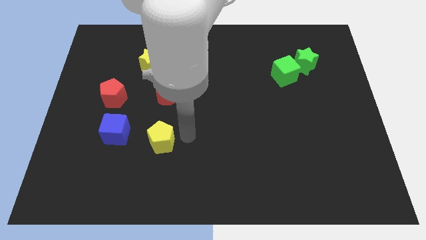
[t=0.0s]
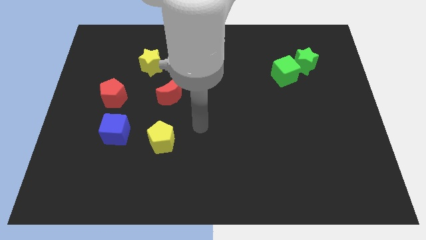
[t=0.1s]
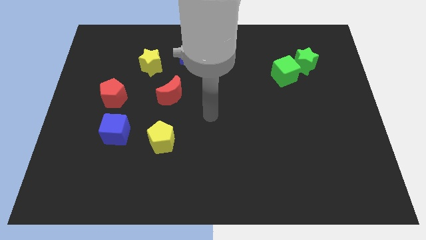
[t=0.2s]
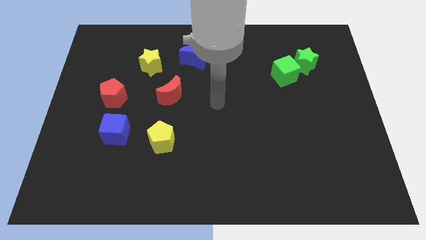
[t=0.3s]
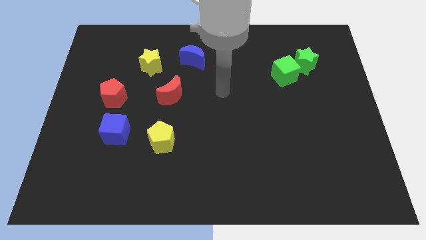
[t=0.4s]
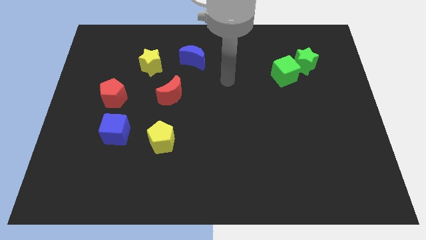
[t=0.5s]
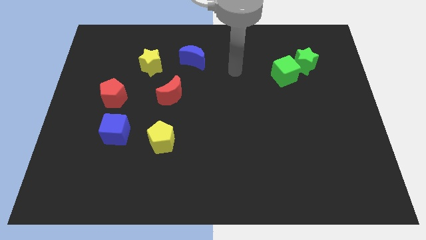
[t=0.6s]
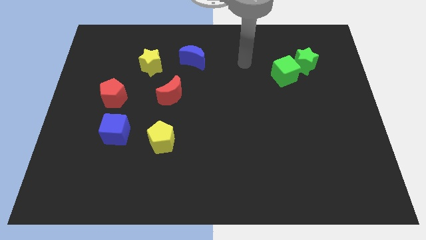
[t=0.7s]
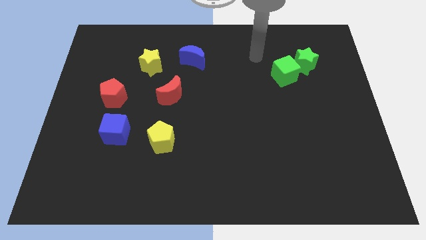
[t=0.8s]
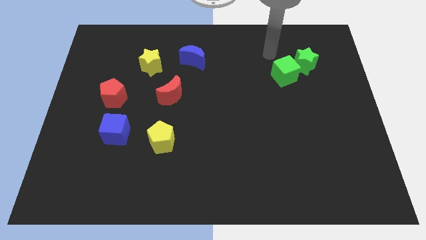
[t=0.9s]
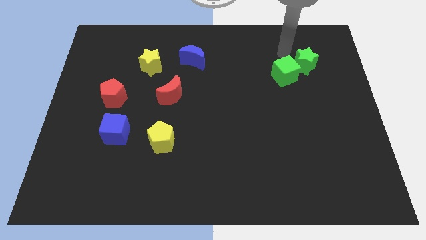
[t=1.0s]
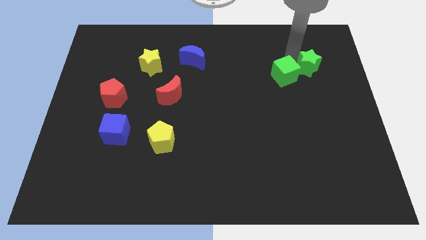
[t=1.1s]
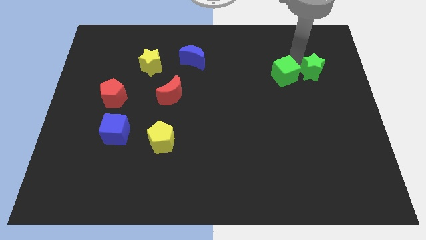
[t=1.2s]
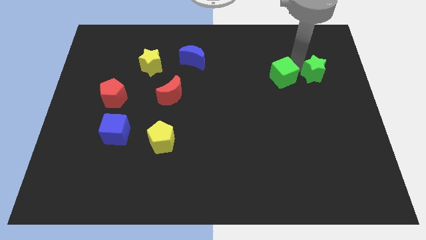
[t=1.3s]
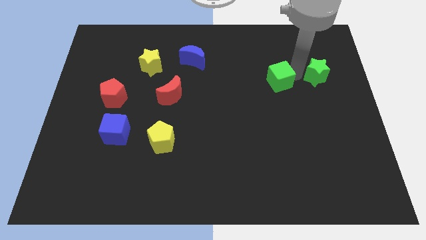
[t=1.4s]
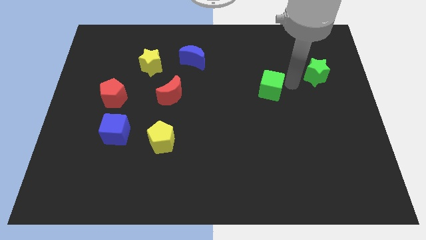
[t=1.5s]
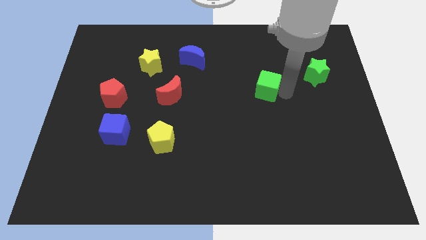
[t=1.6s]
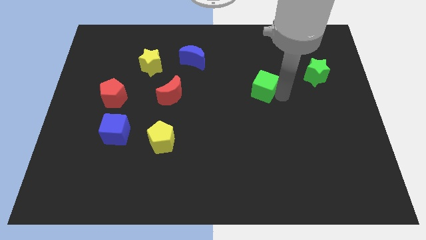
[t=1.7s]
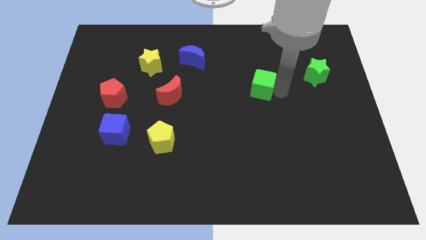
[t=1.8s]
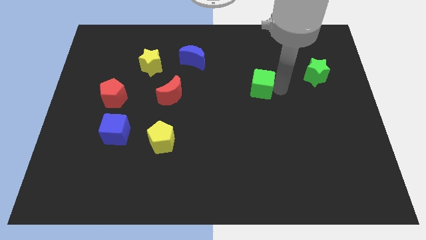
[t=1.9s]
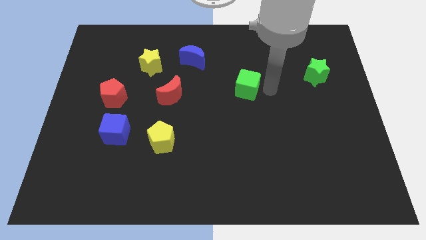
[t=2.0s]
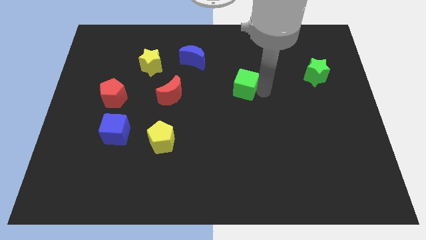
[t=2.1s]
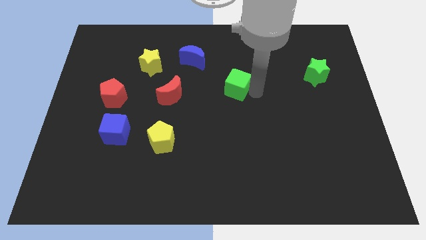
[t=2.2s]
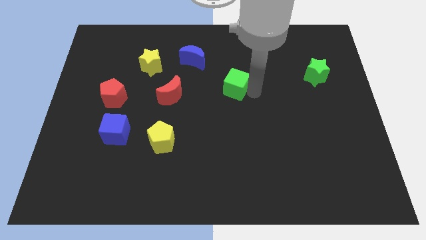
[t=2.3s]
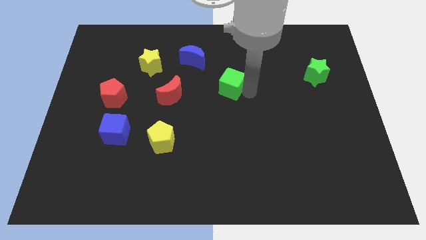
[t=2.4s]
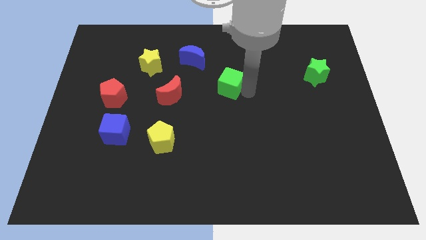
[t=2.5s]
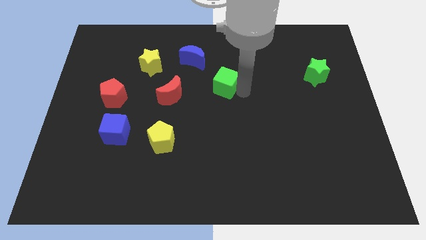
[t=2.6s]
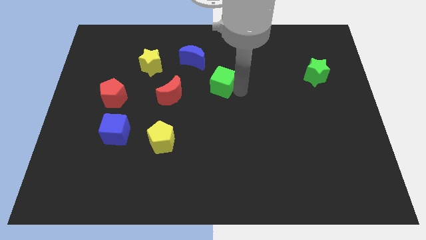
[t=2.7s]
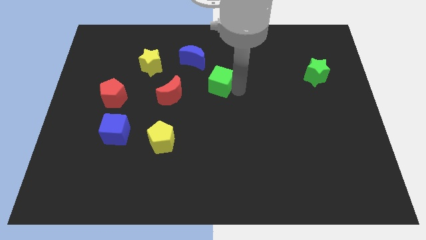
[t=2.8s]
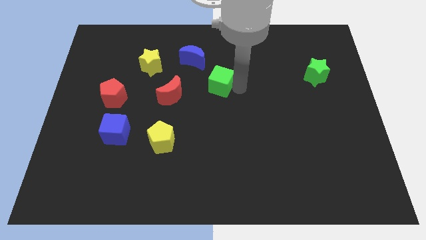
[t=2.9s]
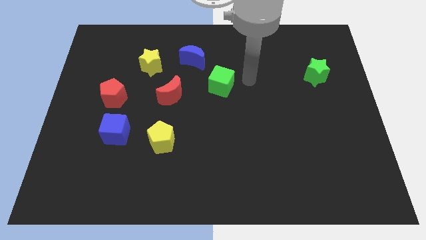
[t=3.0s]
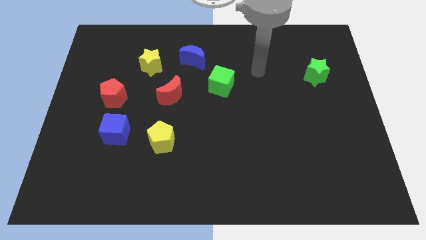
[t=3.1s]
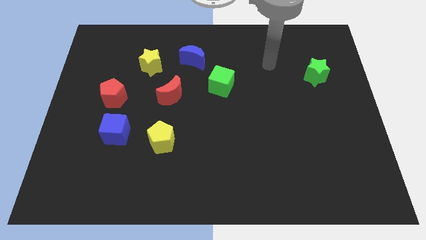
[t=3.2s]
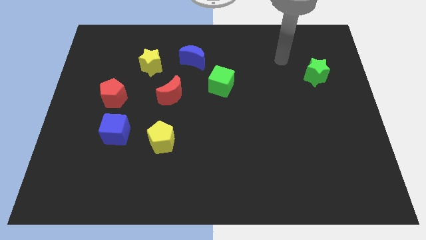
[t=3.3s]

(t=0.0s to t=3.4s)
separate the green cube from the green star

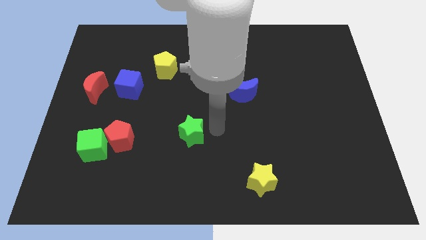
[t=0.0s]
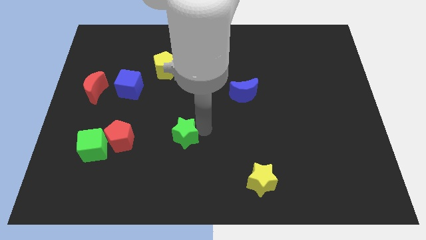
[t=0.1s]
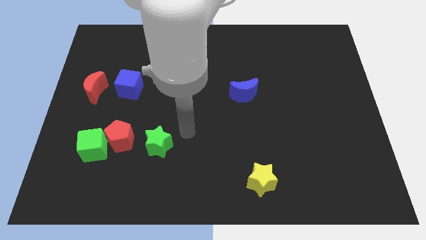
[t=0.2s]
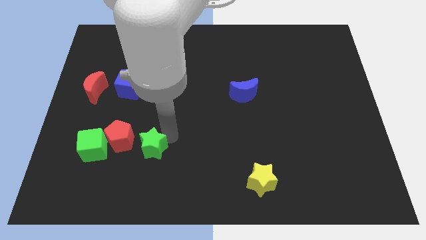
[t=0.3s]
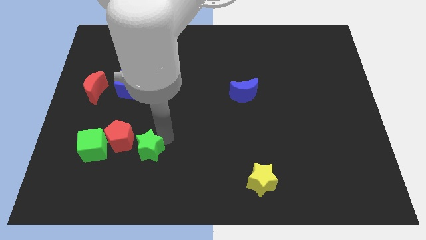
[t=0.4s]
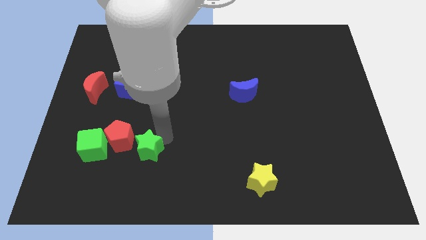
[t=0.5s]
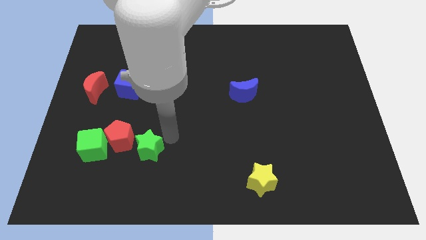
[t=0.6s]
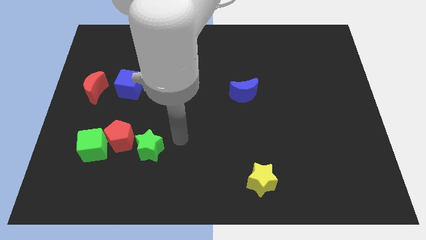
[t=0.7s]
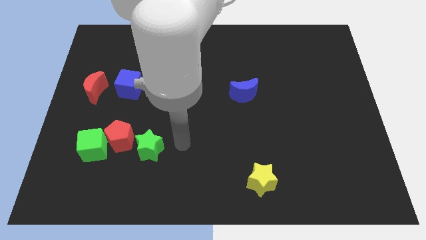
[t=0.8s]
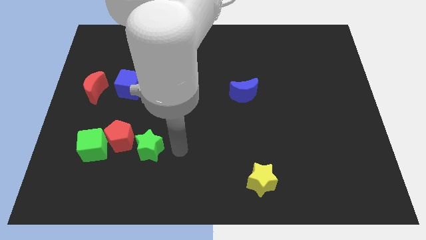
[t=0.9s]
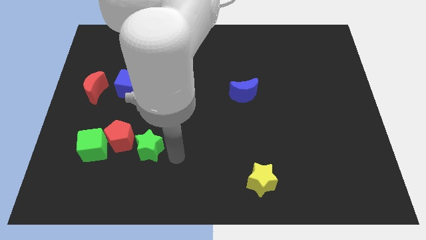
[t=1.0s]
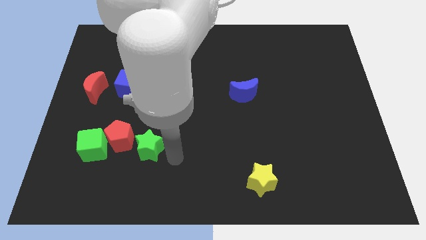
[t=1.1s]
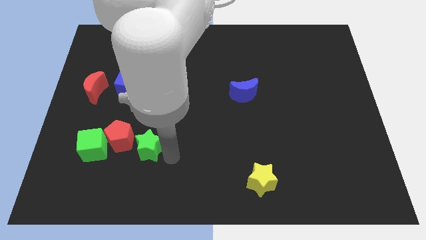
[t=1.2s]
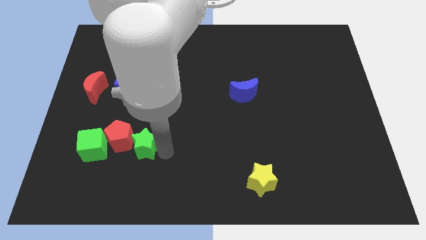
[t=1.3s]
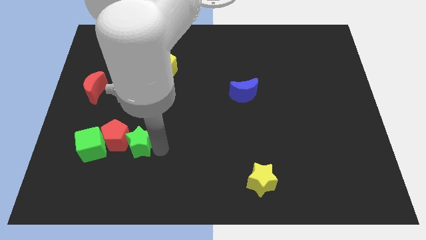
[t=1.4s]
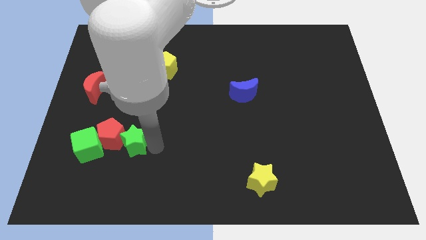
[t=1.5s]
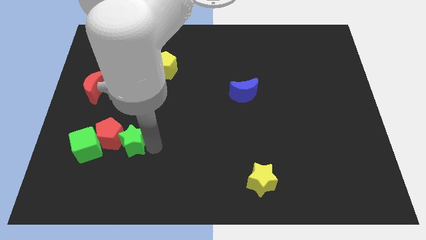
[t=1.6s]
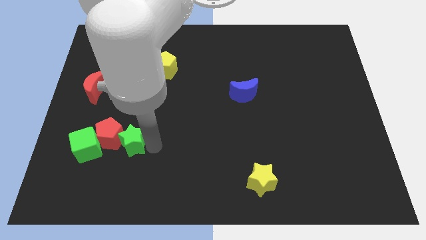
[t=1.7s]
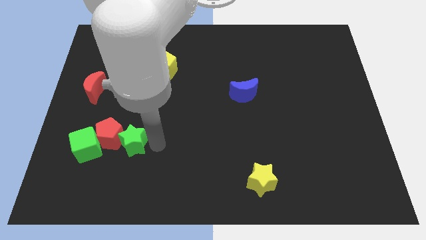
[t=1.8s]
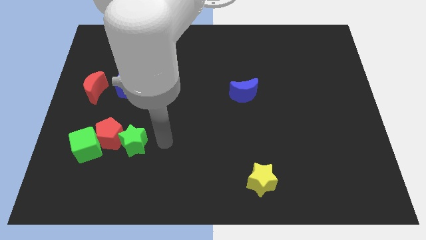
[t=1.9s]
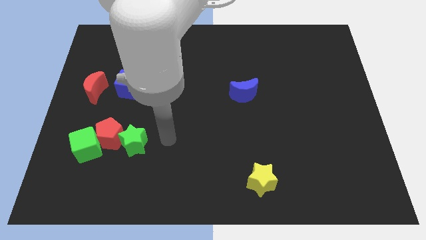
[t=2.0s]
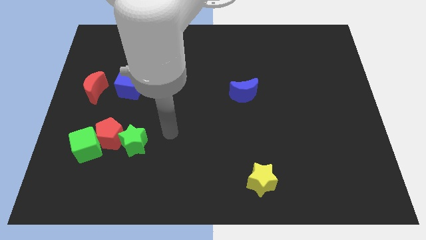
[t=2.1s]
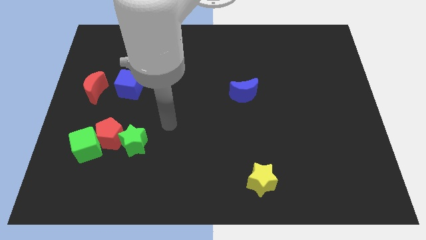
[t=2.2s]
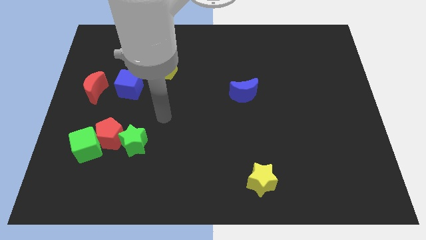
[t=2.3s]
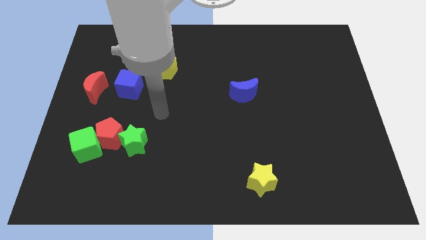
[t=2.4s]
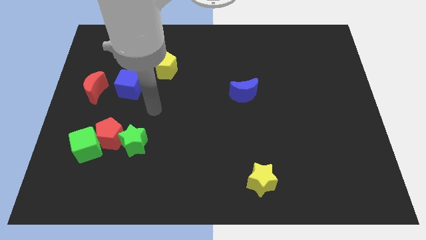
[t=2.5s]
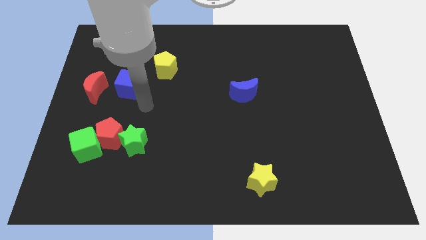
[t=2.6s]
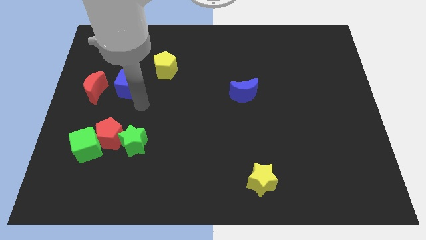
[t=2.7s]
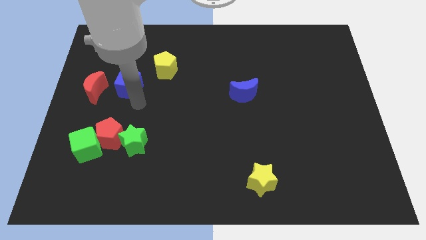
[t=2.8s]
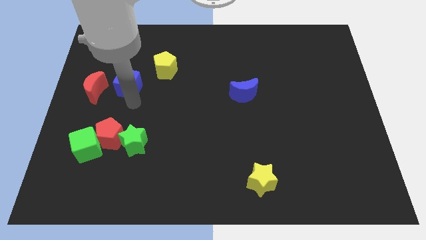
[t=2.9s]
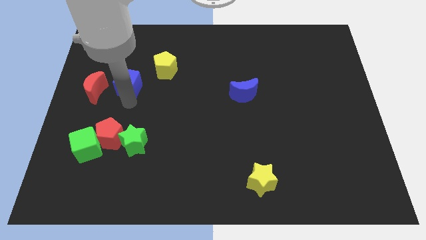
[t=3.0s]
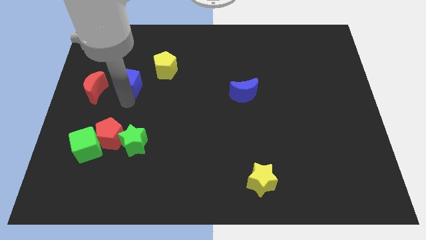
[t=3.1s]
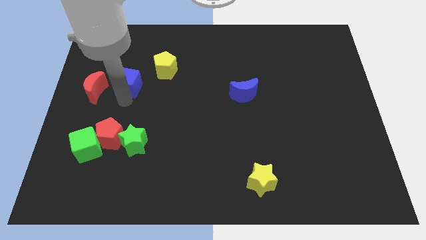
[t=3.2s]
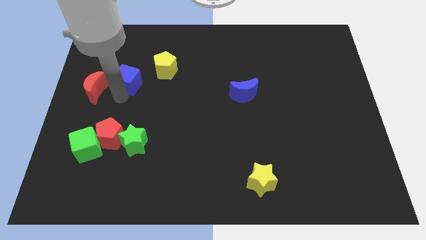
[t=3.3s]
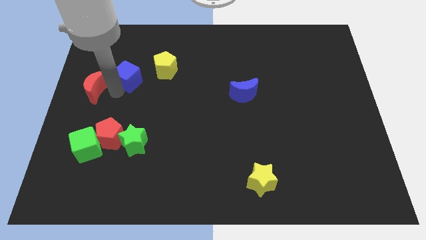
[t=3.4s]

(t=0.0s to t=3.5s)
push the green star into the red pentagon

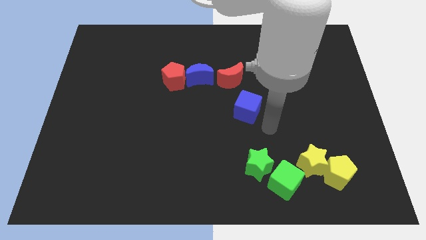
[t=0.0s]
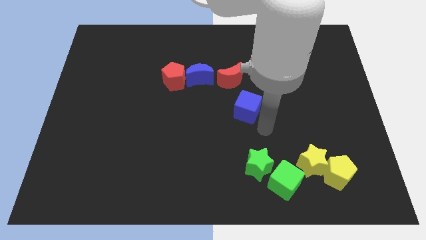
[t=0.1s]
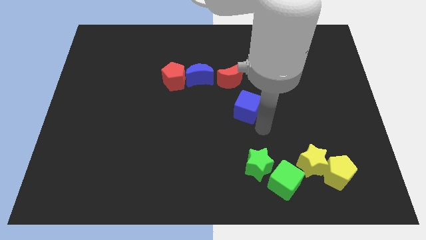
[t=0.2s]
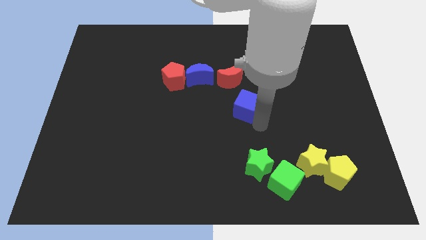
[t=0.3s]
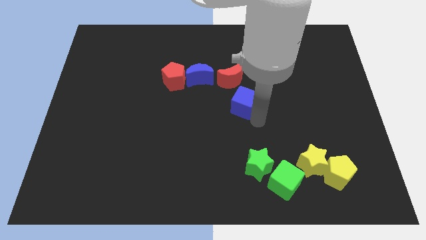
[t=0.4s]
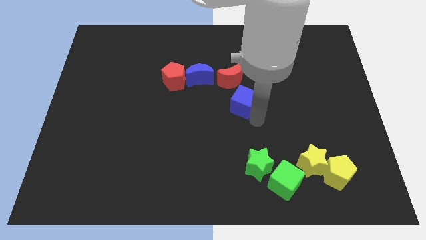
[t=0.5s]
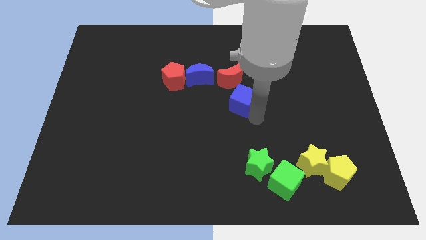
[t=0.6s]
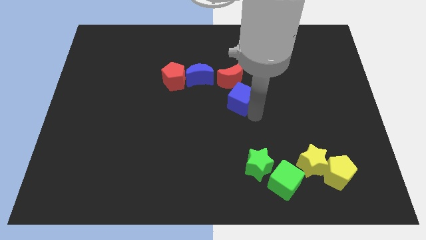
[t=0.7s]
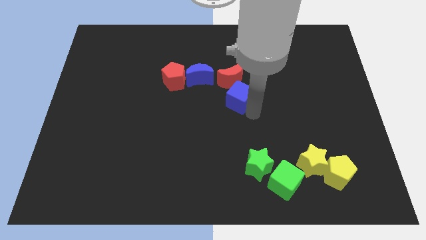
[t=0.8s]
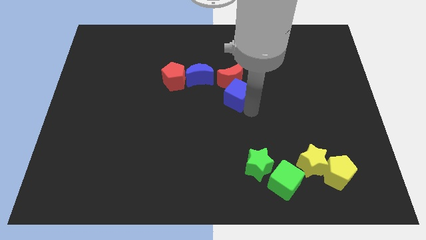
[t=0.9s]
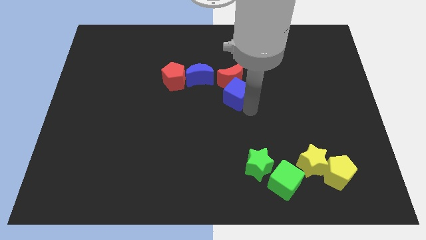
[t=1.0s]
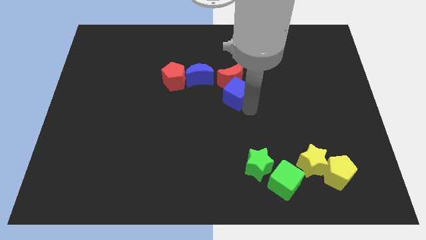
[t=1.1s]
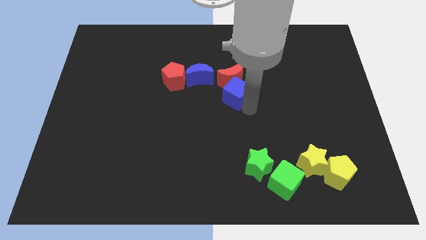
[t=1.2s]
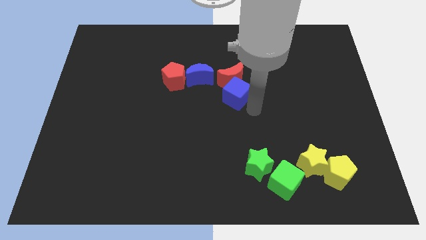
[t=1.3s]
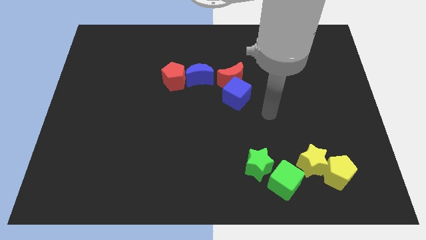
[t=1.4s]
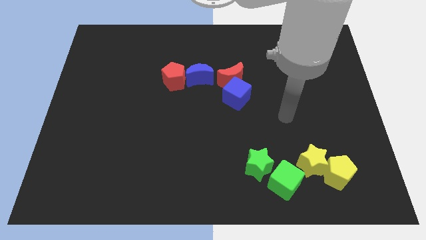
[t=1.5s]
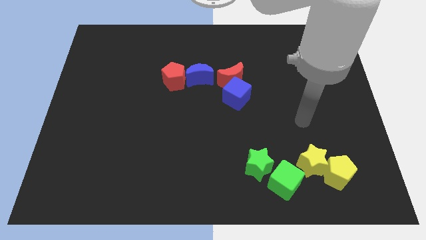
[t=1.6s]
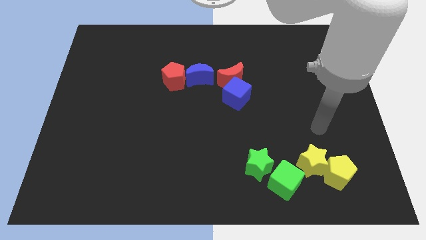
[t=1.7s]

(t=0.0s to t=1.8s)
move the blue cube to the bottom of the red crescent

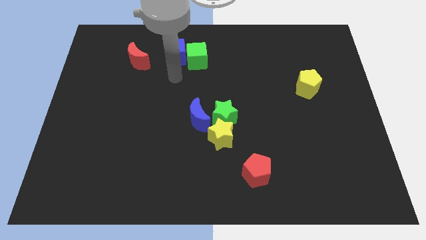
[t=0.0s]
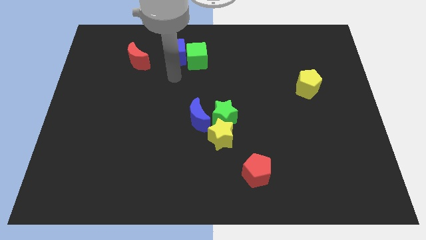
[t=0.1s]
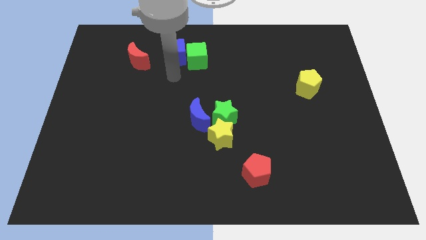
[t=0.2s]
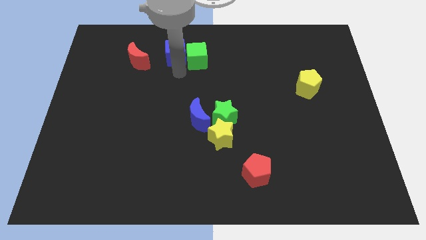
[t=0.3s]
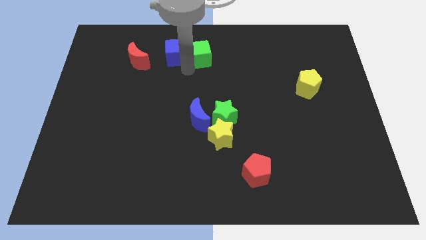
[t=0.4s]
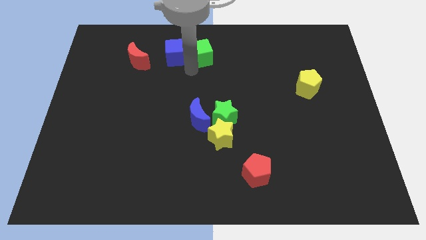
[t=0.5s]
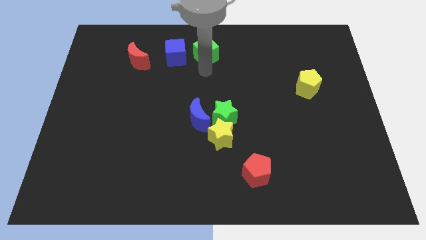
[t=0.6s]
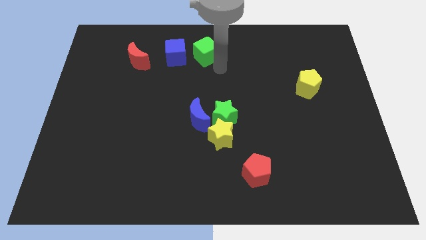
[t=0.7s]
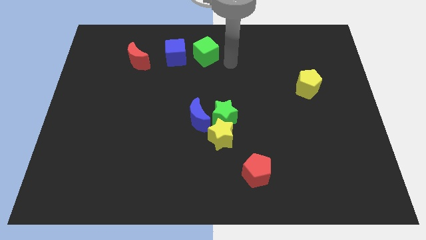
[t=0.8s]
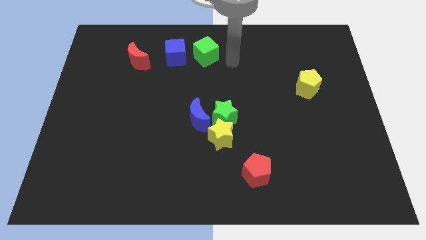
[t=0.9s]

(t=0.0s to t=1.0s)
separate the green cube from the blue cube
